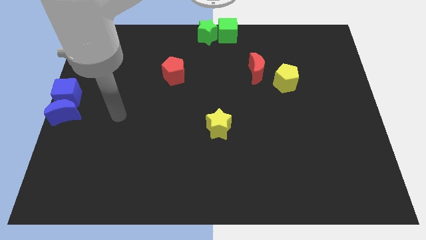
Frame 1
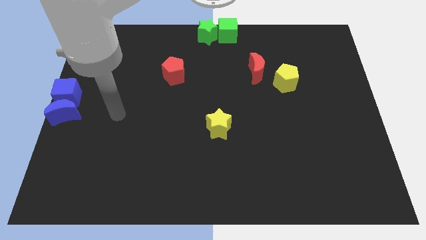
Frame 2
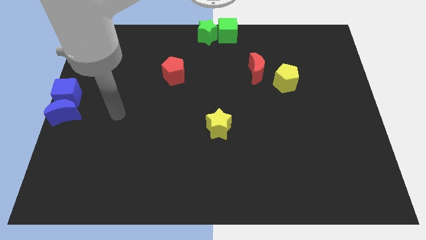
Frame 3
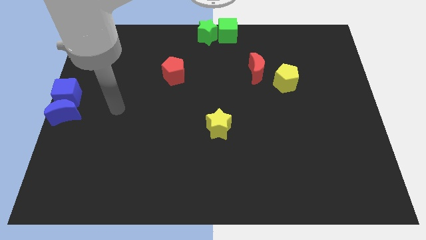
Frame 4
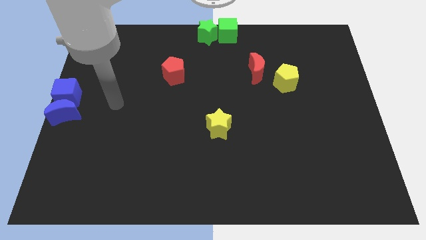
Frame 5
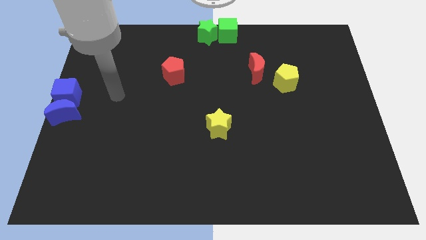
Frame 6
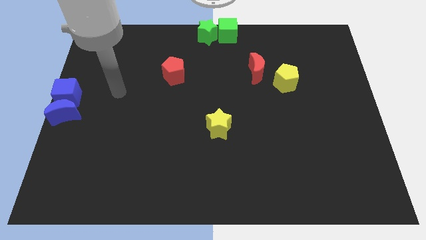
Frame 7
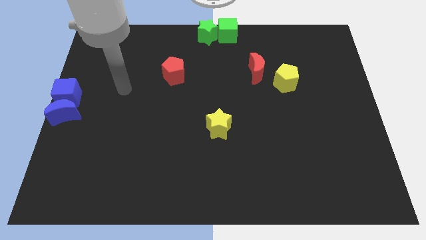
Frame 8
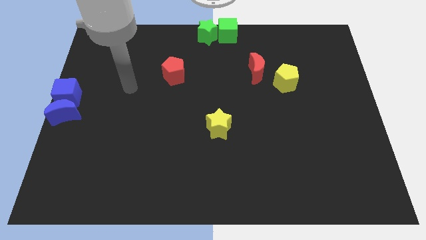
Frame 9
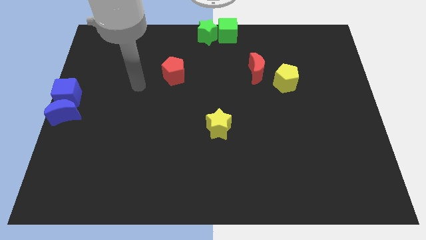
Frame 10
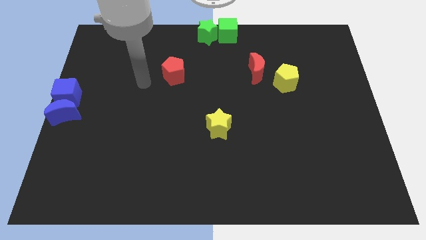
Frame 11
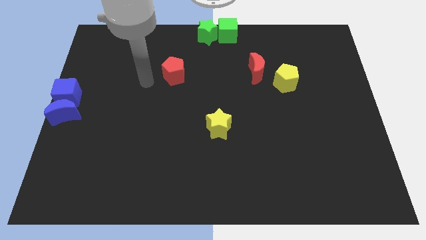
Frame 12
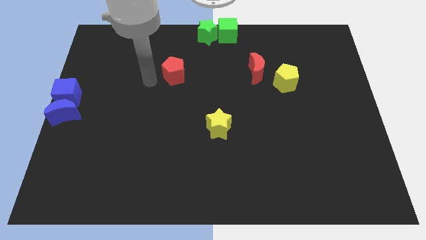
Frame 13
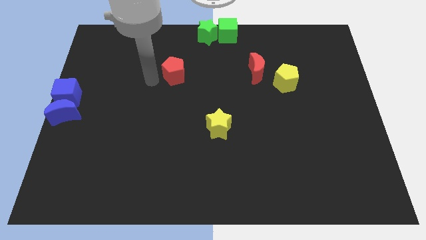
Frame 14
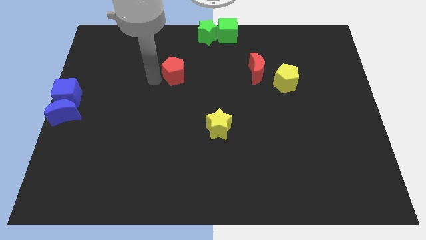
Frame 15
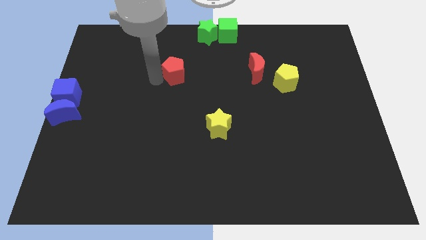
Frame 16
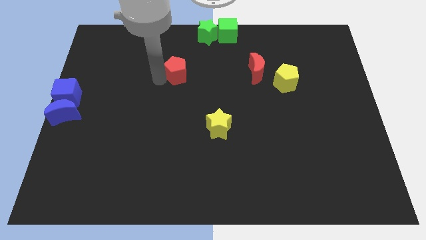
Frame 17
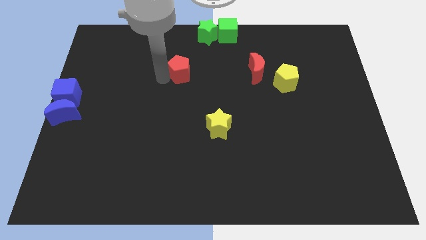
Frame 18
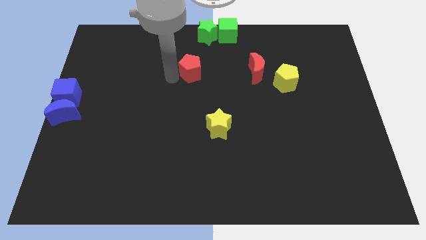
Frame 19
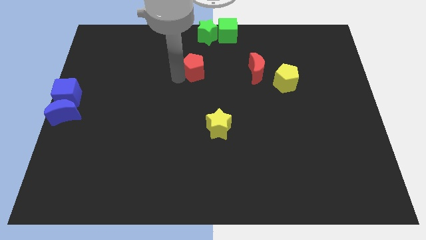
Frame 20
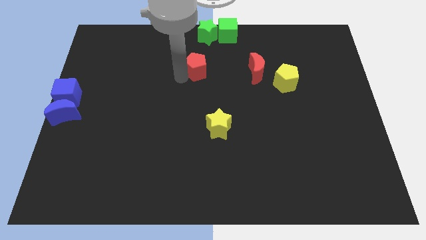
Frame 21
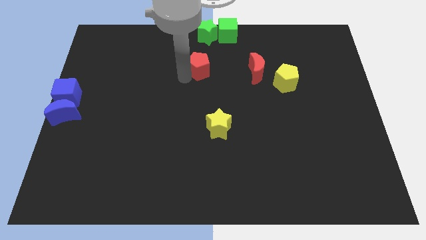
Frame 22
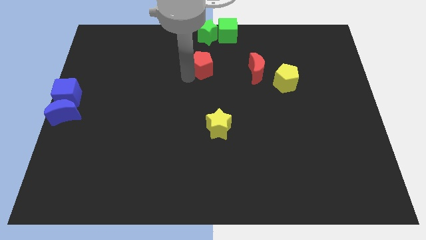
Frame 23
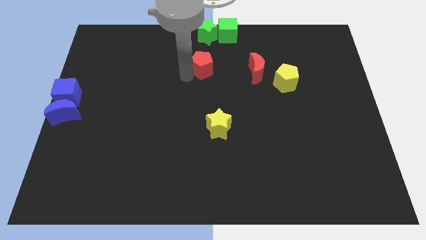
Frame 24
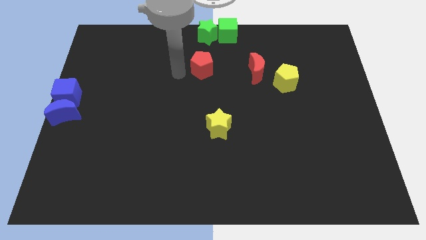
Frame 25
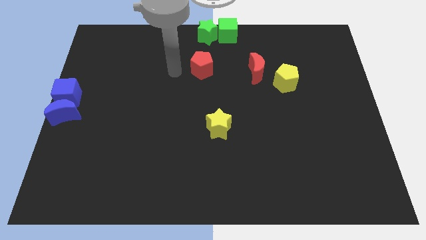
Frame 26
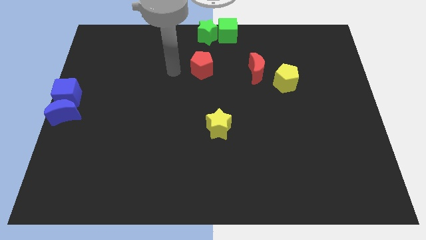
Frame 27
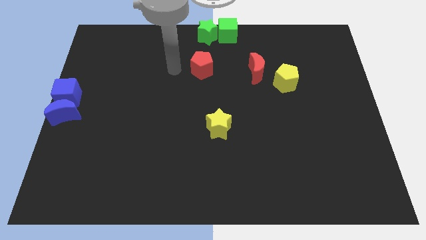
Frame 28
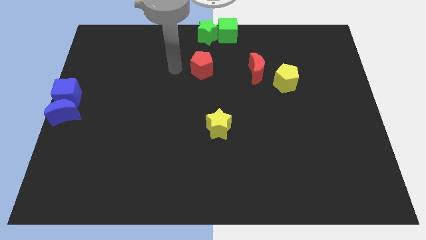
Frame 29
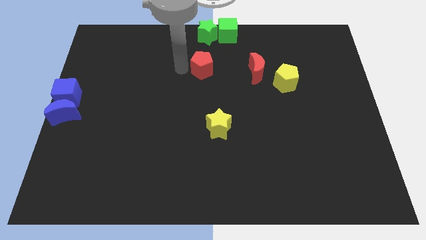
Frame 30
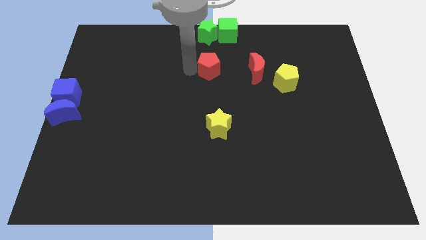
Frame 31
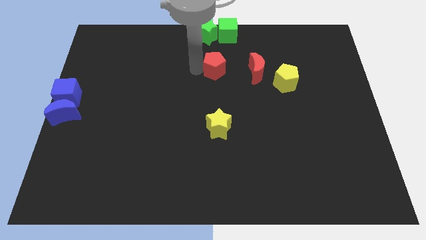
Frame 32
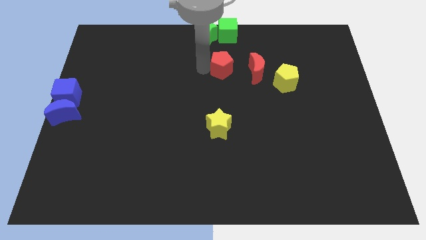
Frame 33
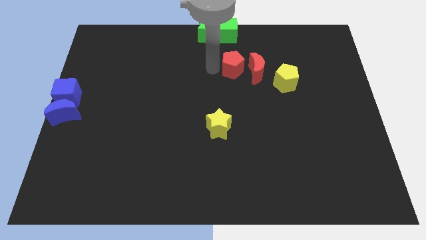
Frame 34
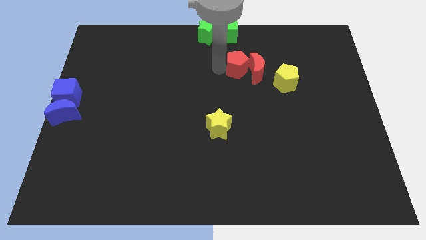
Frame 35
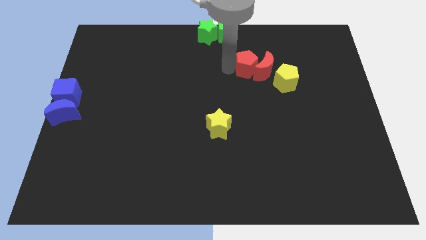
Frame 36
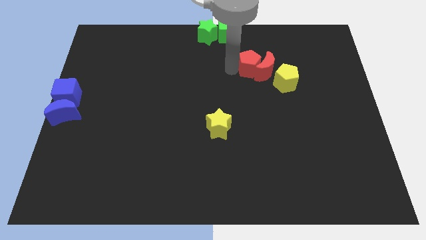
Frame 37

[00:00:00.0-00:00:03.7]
push the red pentagon into red crescent

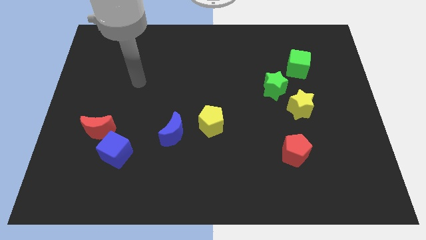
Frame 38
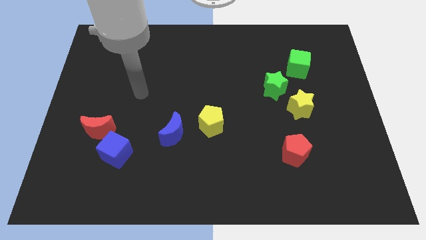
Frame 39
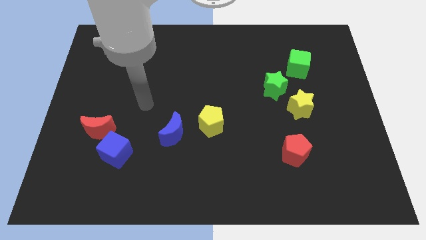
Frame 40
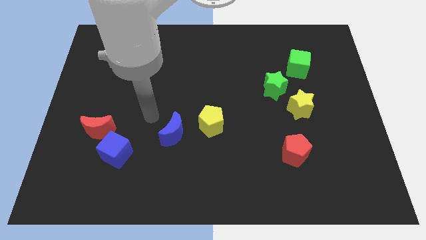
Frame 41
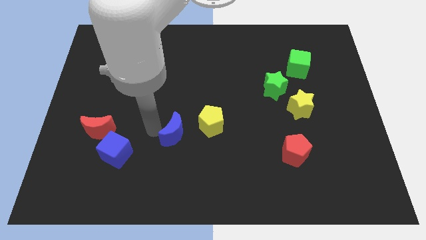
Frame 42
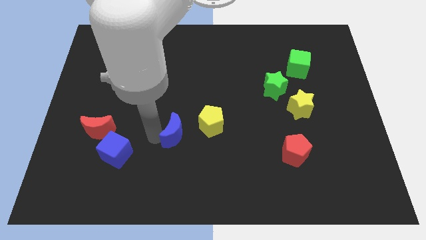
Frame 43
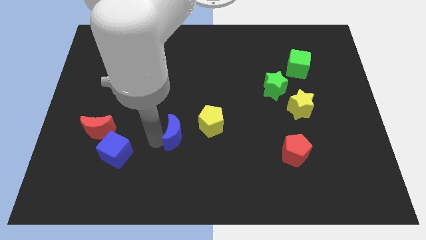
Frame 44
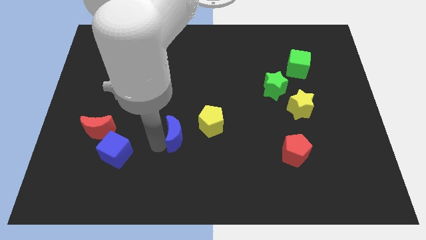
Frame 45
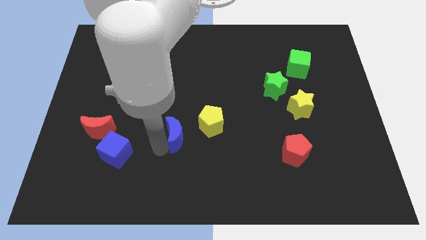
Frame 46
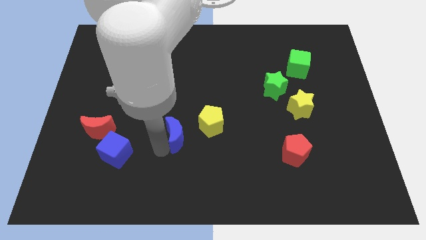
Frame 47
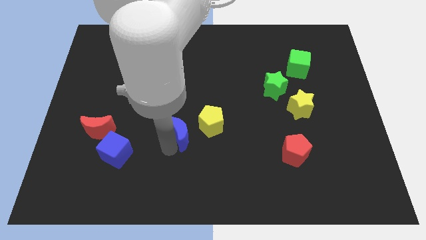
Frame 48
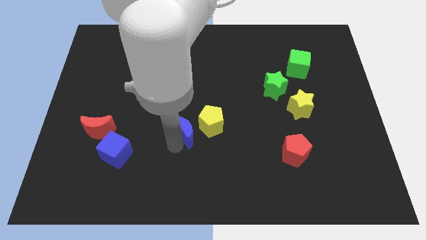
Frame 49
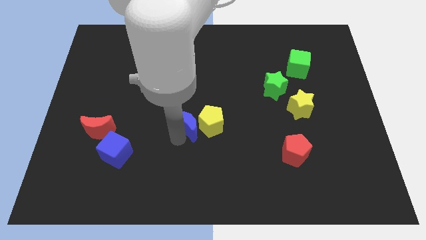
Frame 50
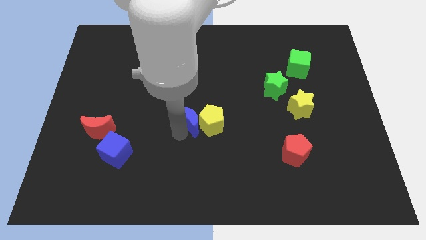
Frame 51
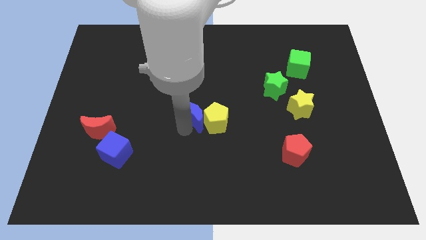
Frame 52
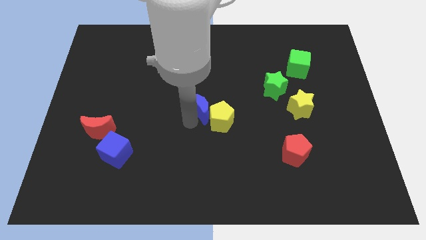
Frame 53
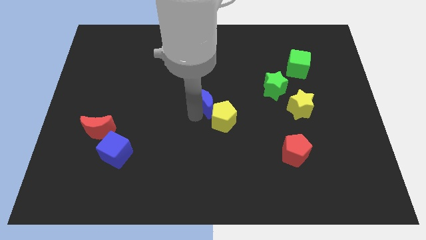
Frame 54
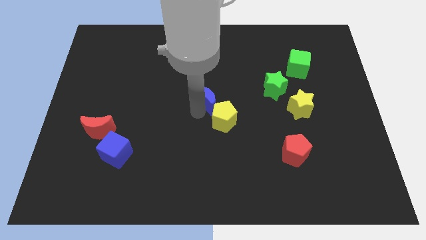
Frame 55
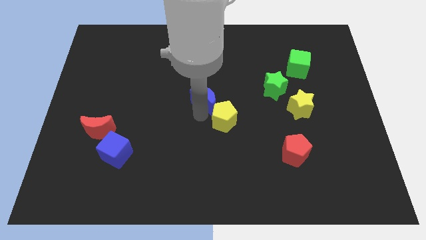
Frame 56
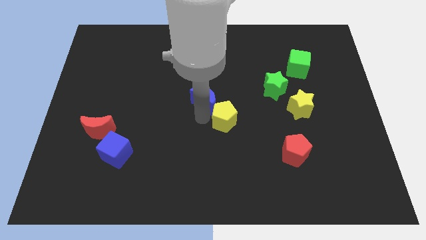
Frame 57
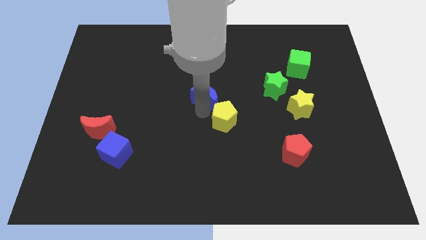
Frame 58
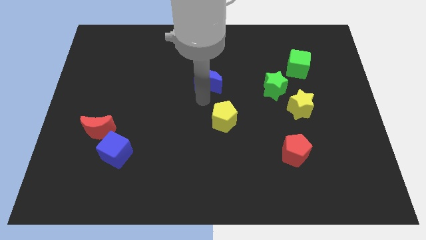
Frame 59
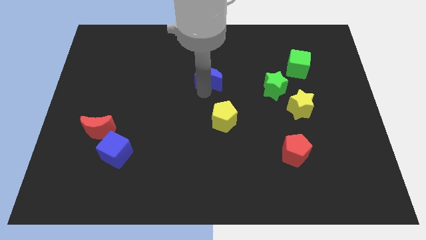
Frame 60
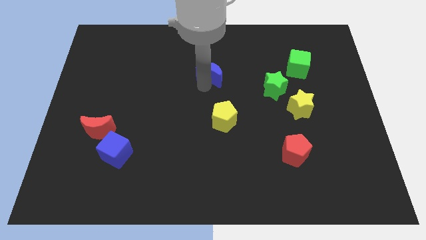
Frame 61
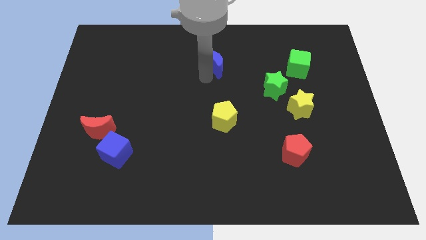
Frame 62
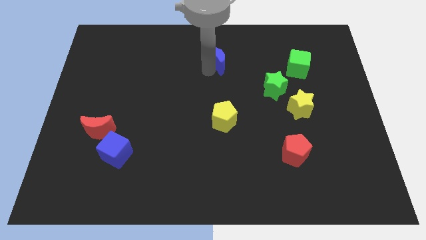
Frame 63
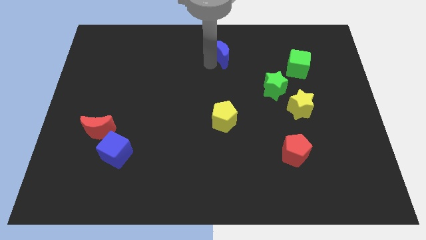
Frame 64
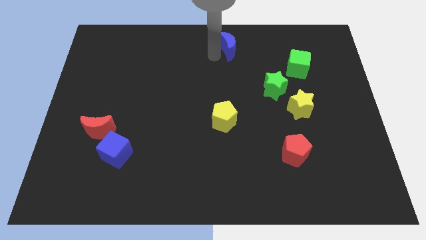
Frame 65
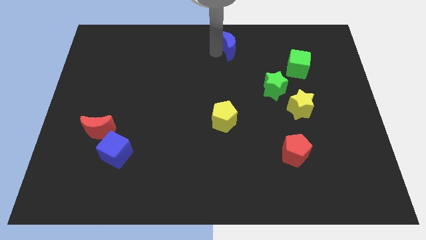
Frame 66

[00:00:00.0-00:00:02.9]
put blue crescent vertically above yellow pentagon

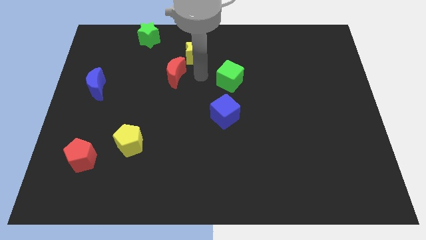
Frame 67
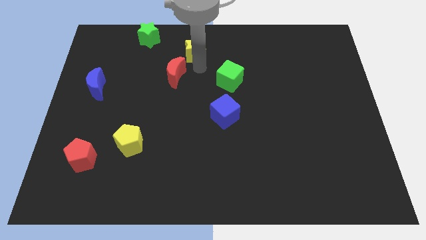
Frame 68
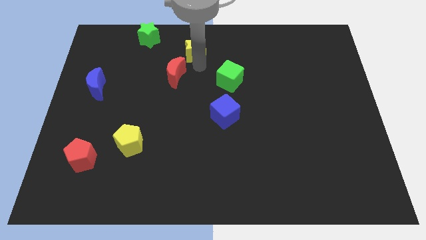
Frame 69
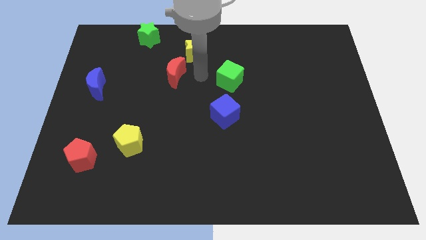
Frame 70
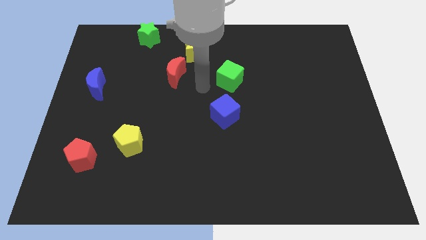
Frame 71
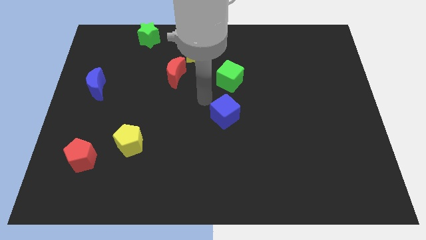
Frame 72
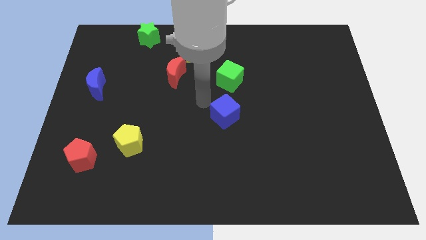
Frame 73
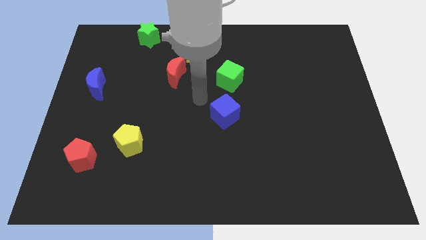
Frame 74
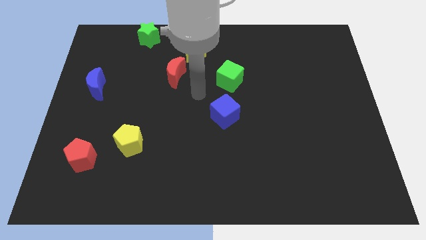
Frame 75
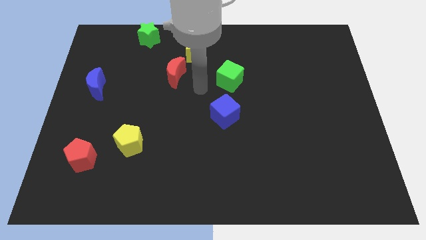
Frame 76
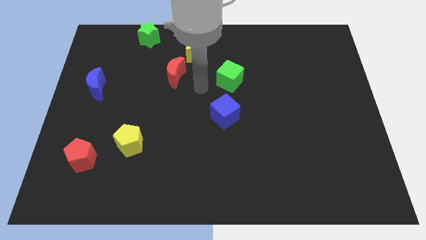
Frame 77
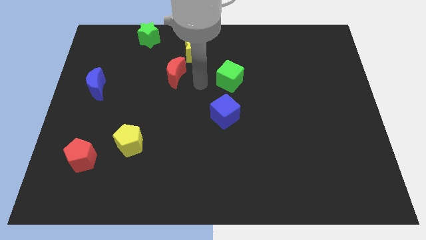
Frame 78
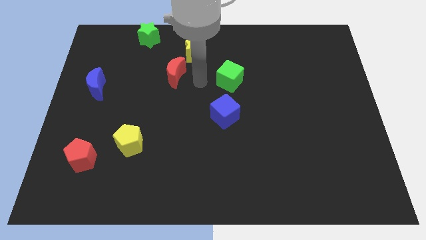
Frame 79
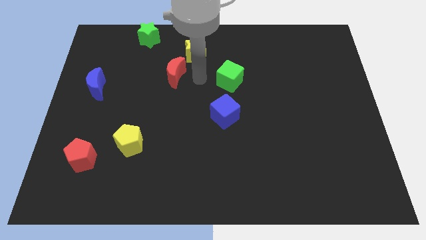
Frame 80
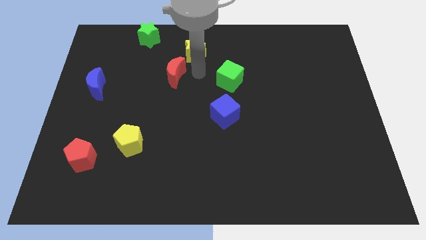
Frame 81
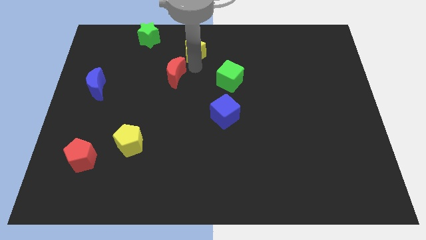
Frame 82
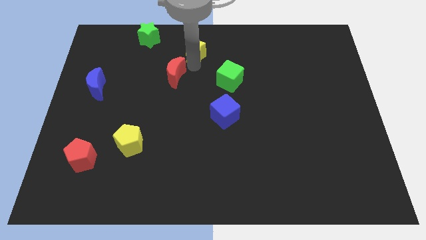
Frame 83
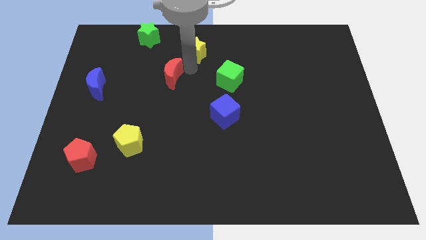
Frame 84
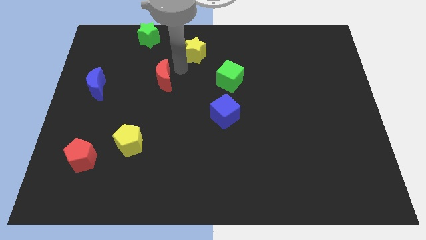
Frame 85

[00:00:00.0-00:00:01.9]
move the yellow star and the red moon away from each other

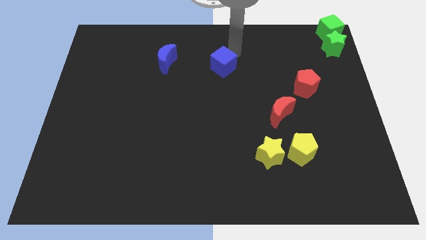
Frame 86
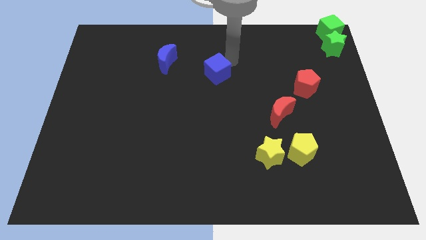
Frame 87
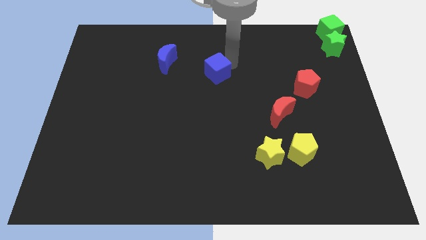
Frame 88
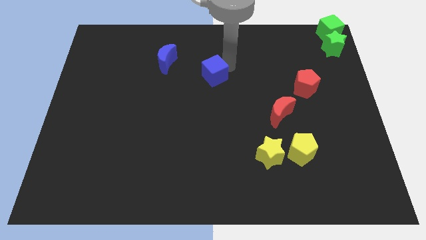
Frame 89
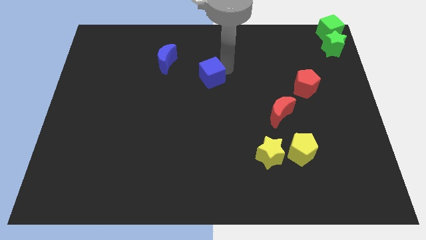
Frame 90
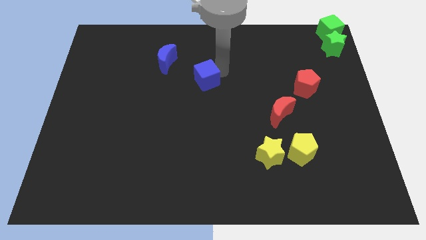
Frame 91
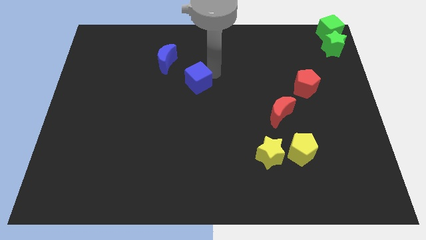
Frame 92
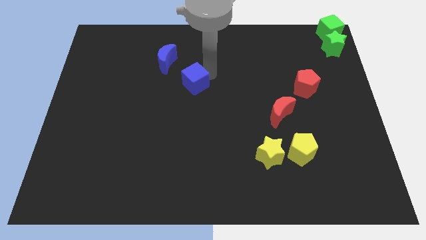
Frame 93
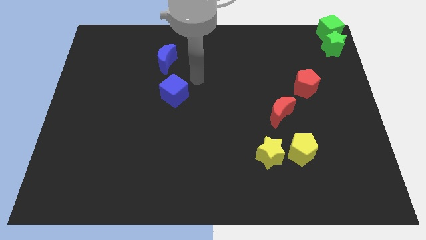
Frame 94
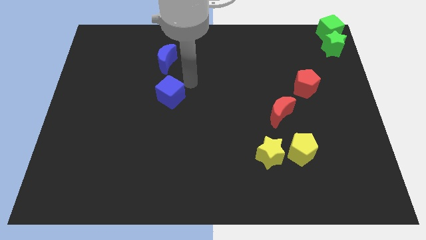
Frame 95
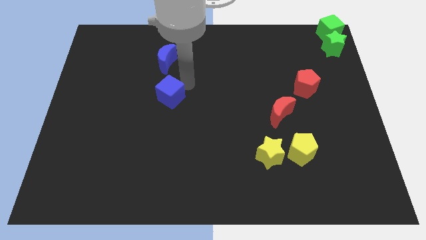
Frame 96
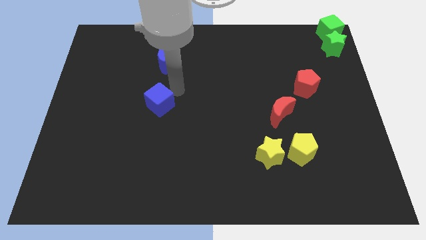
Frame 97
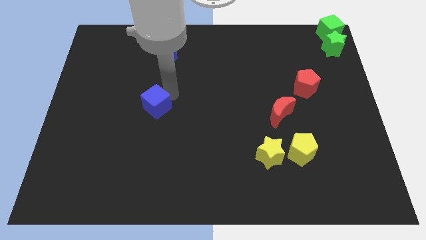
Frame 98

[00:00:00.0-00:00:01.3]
place the blue cube below the blue moon
